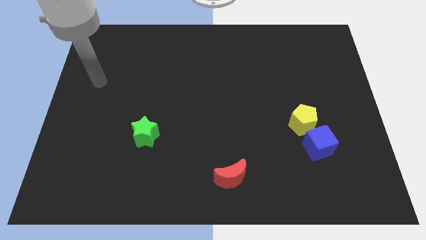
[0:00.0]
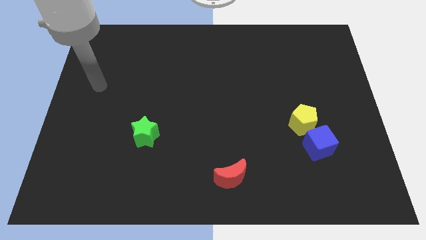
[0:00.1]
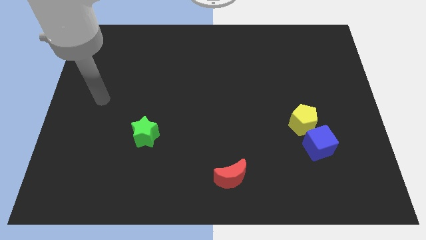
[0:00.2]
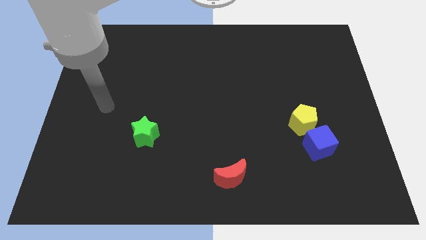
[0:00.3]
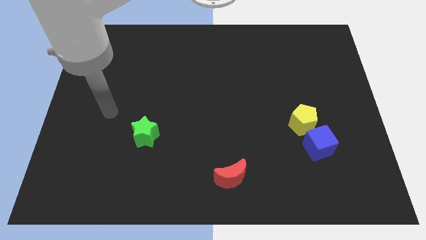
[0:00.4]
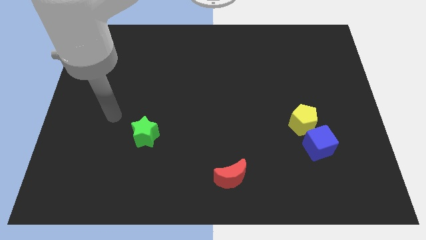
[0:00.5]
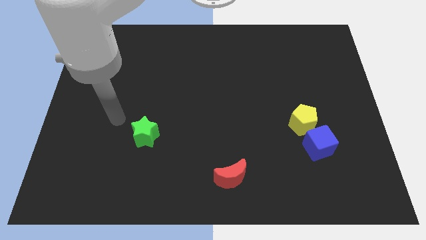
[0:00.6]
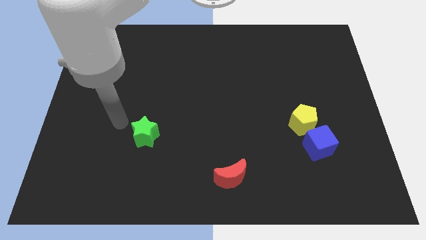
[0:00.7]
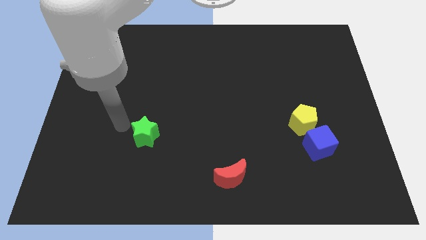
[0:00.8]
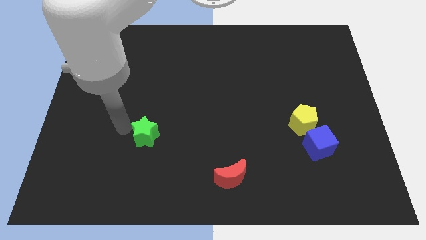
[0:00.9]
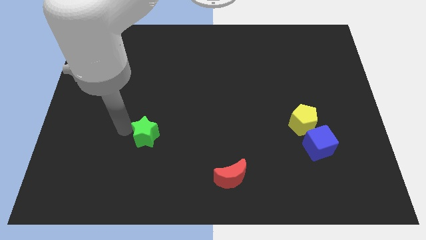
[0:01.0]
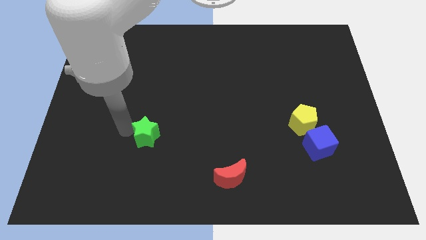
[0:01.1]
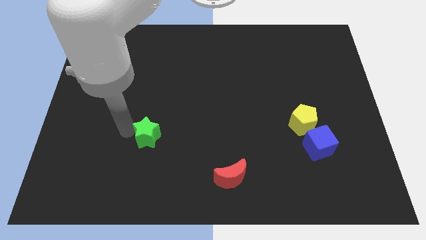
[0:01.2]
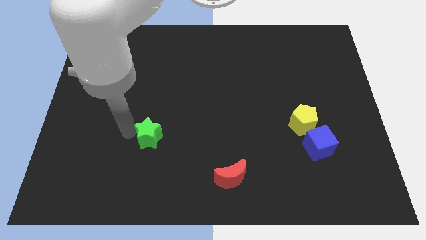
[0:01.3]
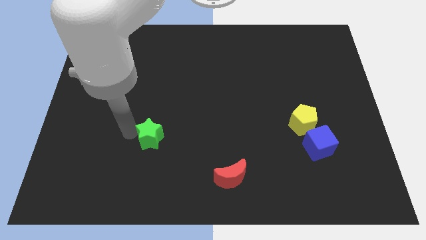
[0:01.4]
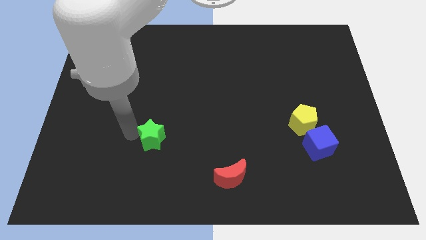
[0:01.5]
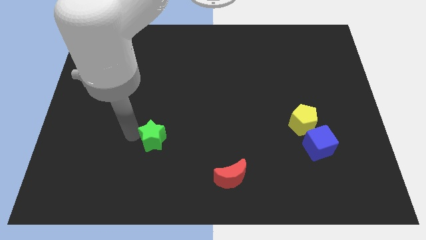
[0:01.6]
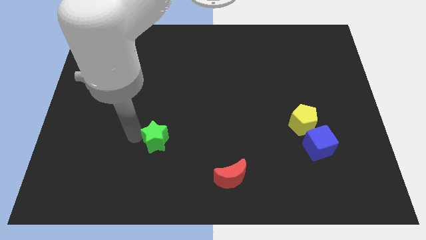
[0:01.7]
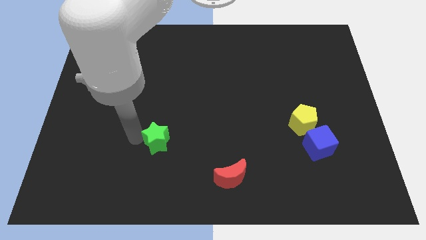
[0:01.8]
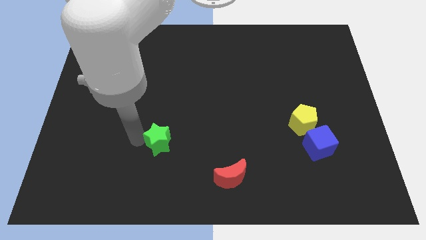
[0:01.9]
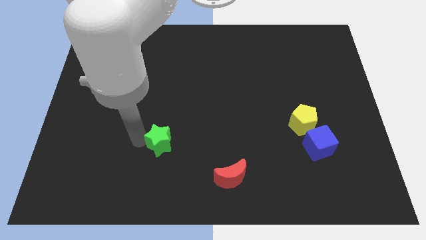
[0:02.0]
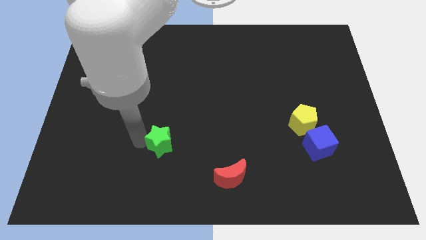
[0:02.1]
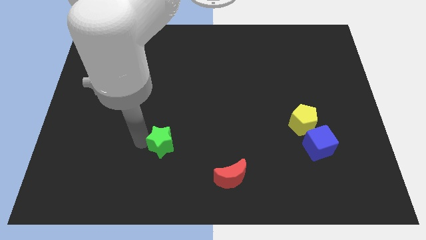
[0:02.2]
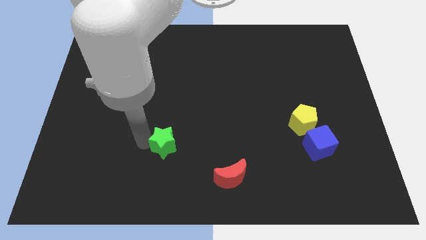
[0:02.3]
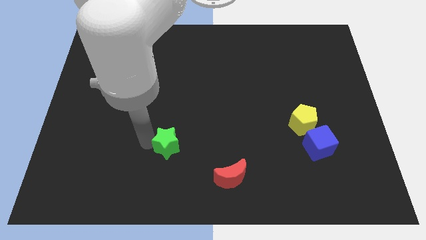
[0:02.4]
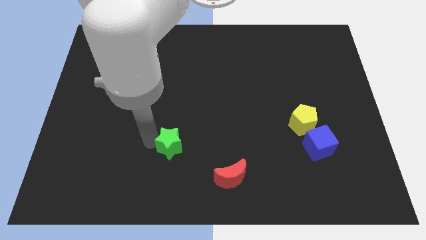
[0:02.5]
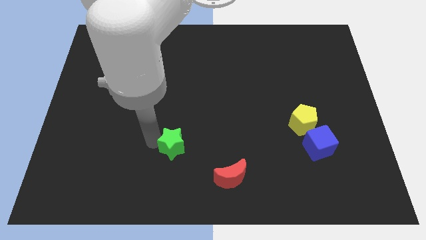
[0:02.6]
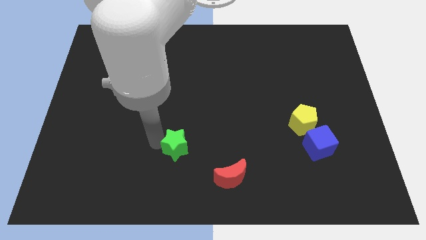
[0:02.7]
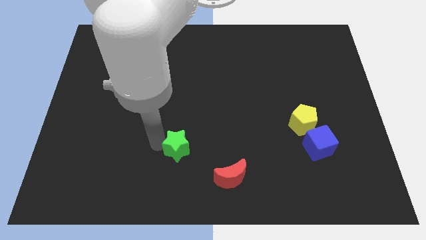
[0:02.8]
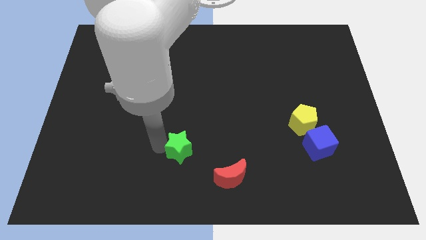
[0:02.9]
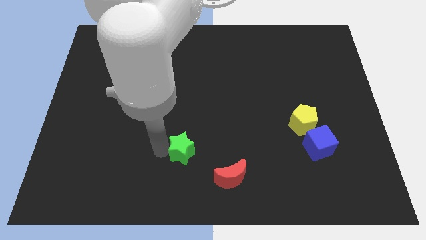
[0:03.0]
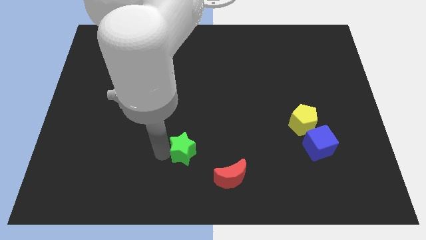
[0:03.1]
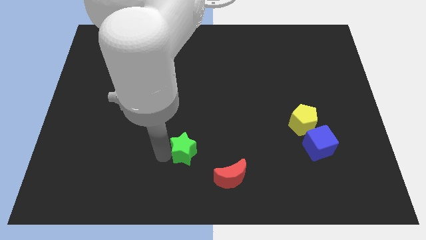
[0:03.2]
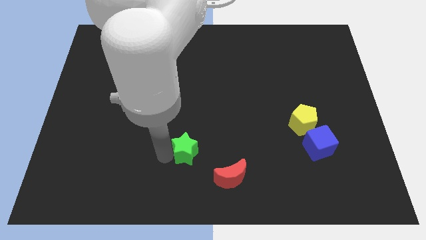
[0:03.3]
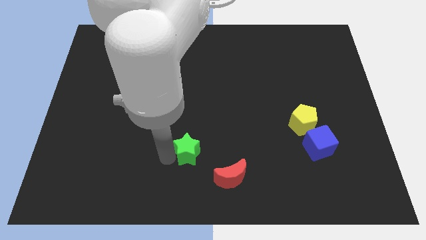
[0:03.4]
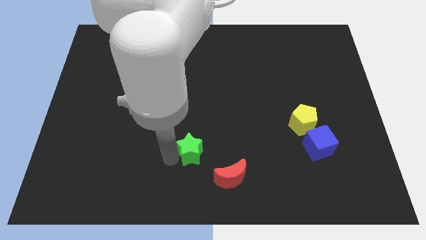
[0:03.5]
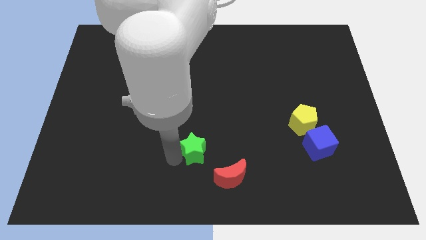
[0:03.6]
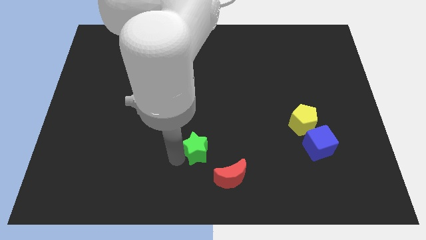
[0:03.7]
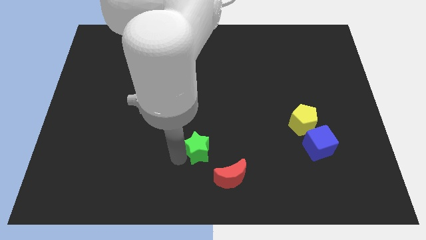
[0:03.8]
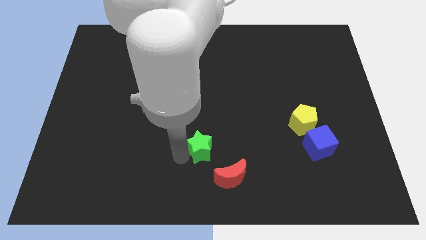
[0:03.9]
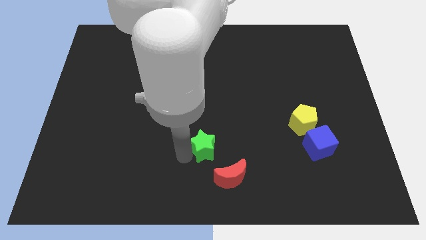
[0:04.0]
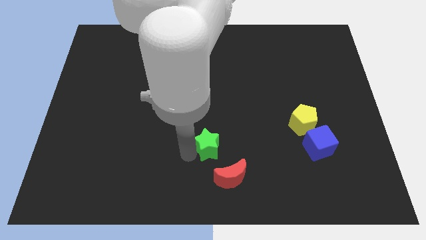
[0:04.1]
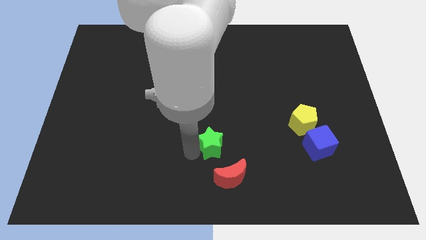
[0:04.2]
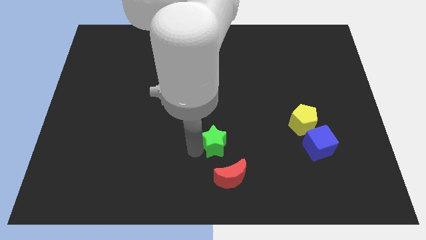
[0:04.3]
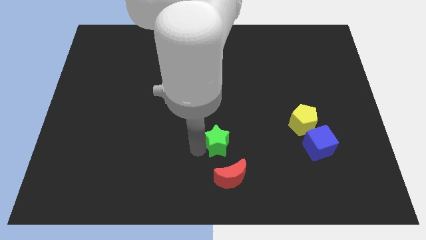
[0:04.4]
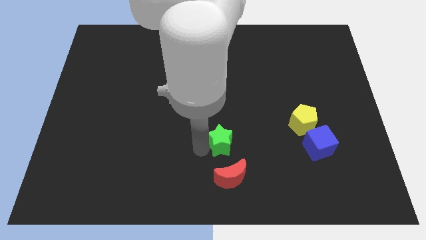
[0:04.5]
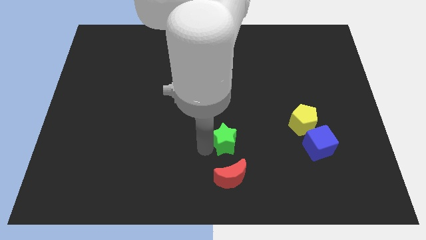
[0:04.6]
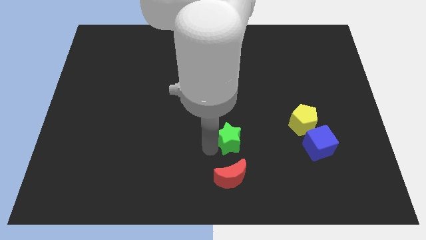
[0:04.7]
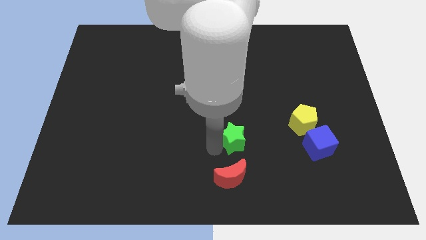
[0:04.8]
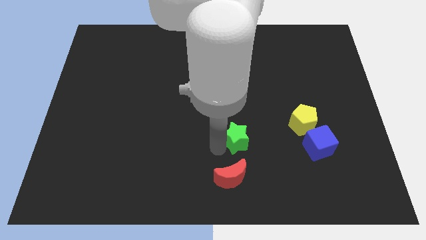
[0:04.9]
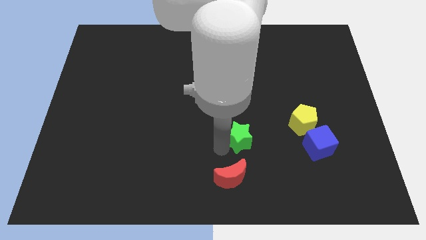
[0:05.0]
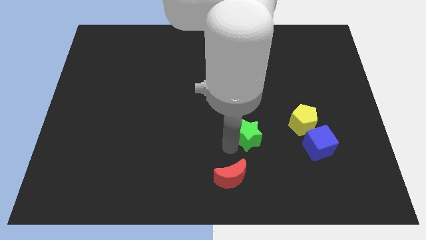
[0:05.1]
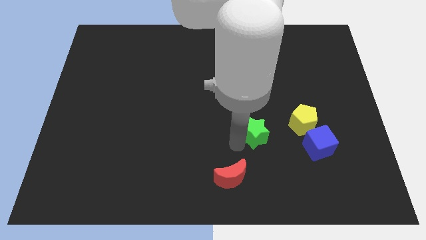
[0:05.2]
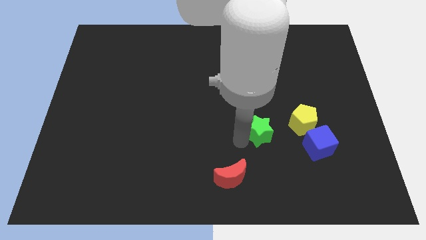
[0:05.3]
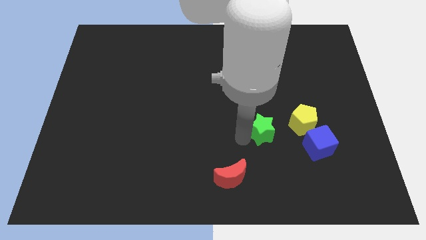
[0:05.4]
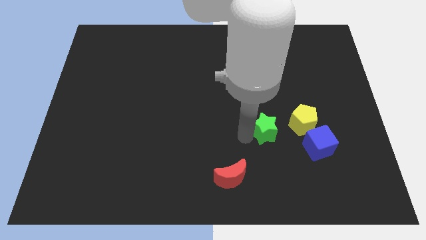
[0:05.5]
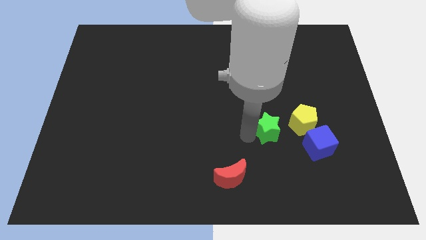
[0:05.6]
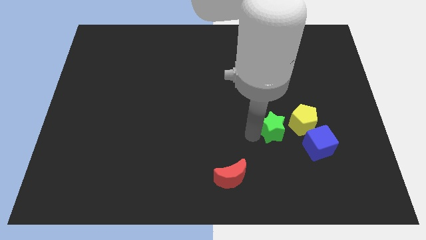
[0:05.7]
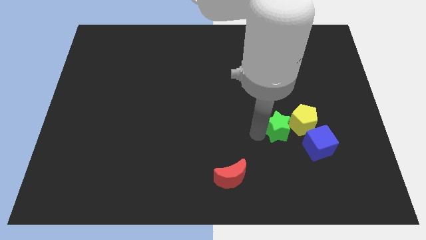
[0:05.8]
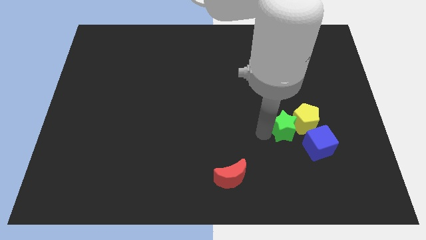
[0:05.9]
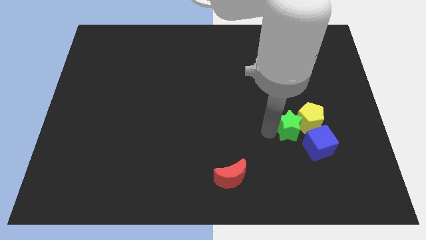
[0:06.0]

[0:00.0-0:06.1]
push the star to the pentagon

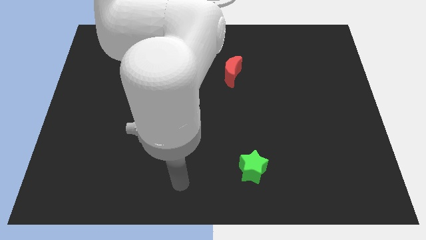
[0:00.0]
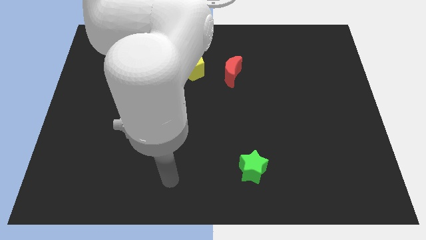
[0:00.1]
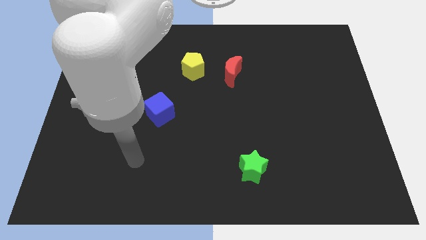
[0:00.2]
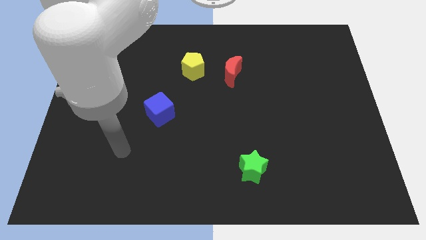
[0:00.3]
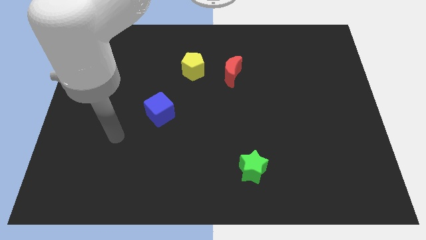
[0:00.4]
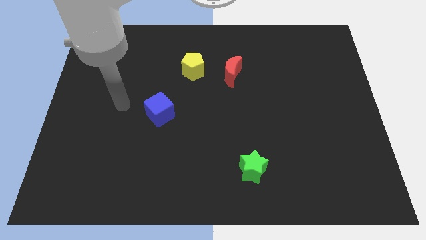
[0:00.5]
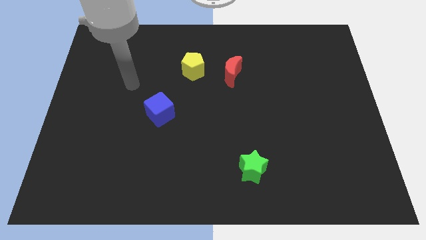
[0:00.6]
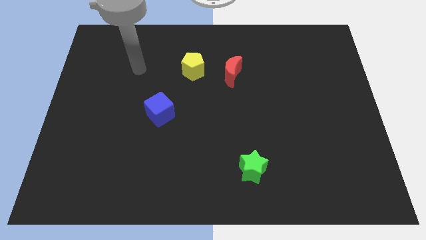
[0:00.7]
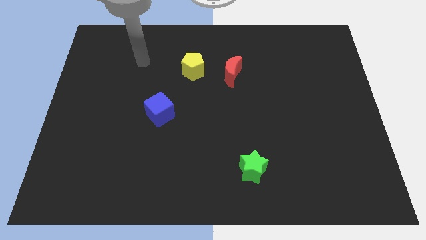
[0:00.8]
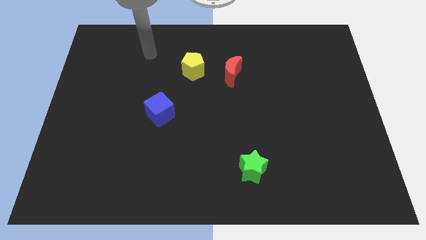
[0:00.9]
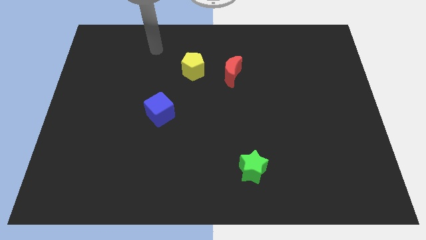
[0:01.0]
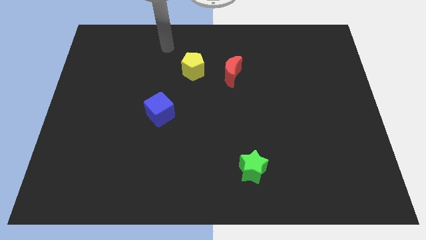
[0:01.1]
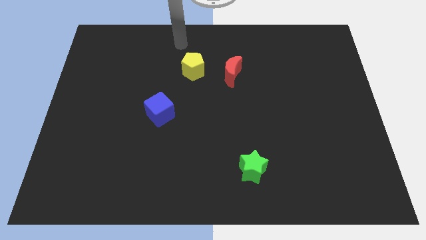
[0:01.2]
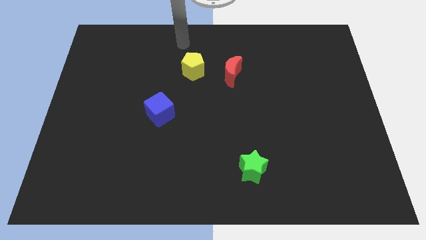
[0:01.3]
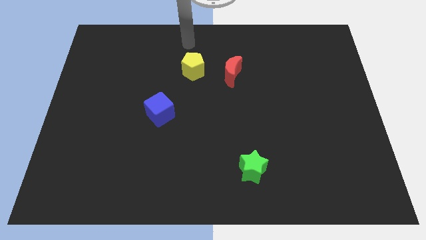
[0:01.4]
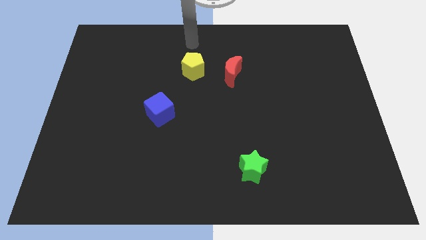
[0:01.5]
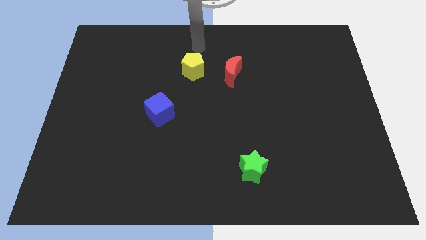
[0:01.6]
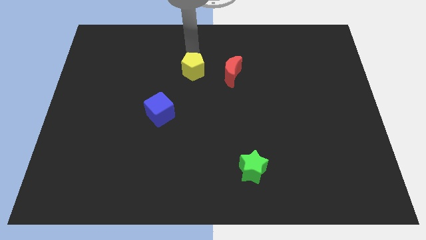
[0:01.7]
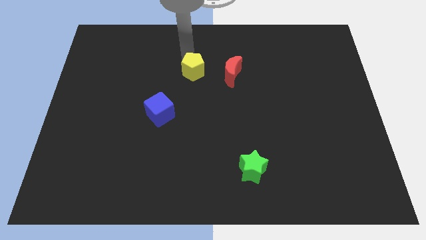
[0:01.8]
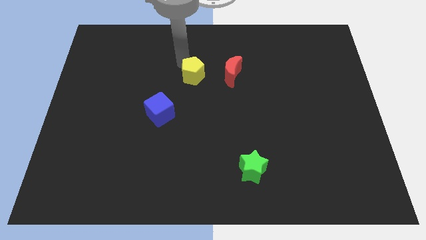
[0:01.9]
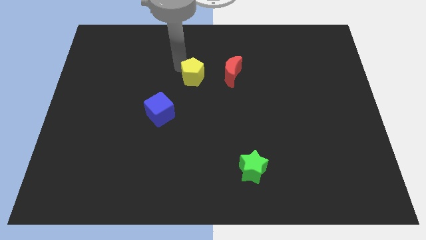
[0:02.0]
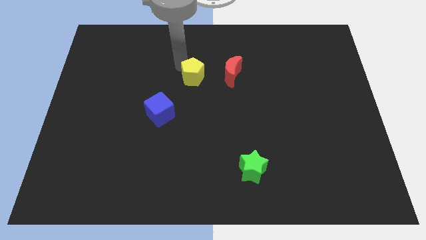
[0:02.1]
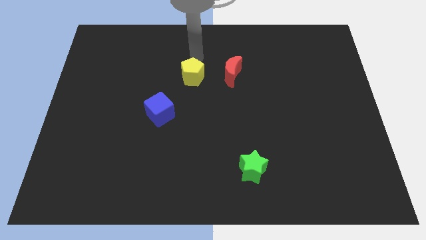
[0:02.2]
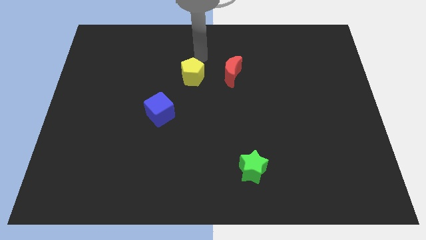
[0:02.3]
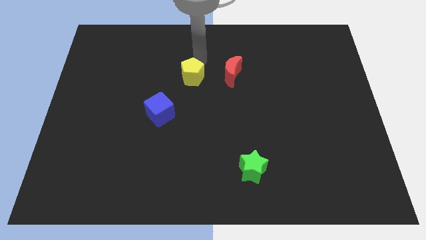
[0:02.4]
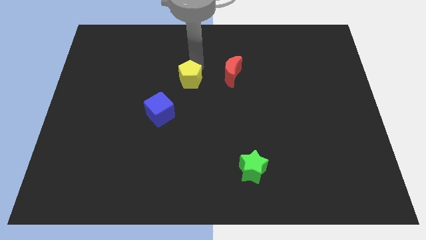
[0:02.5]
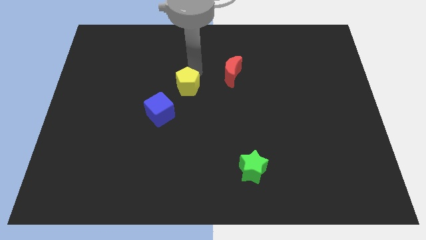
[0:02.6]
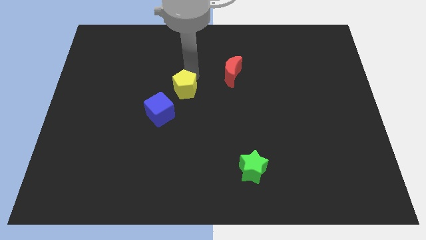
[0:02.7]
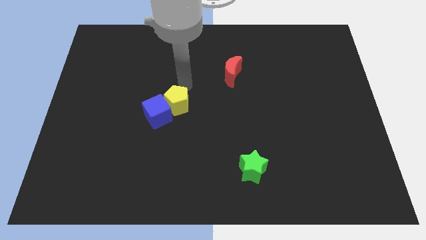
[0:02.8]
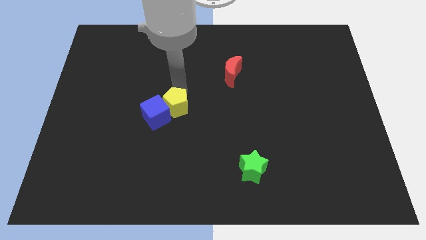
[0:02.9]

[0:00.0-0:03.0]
put the yellow block towards the cube
